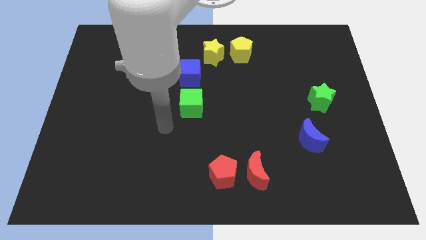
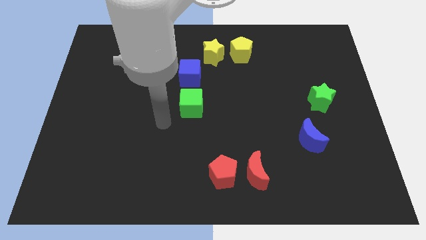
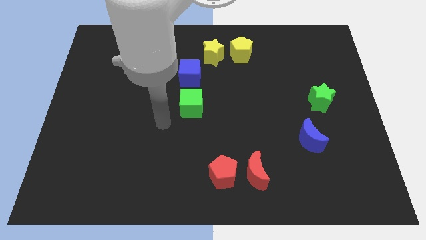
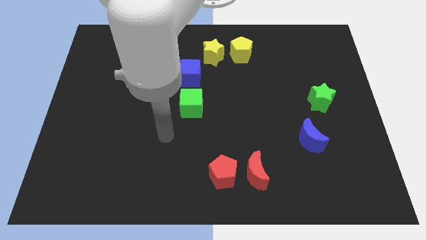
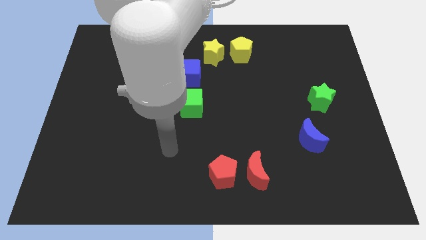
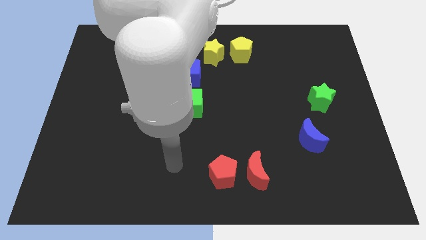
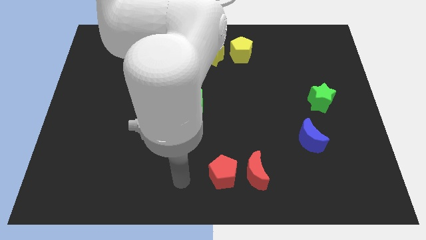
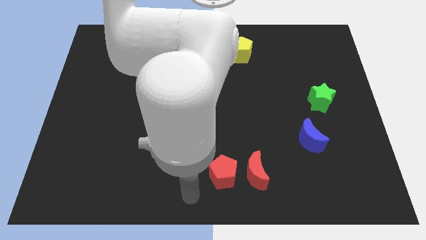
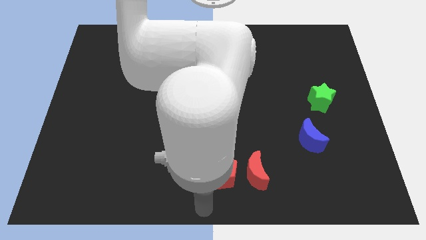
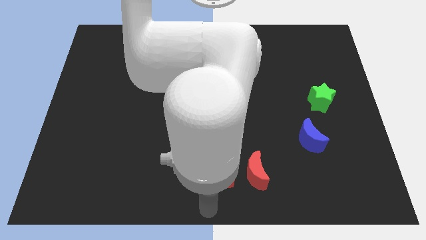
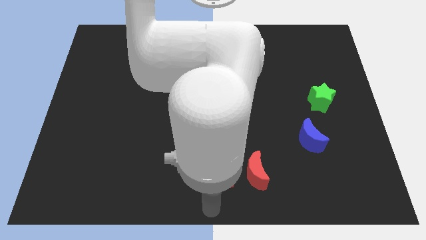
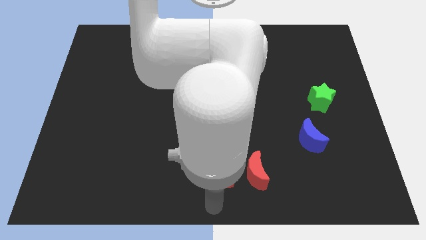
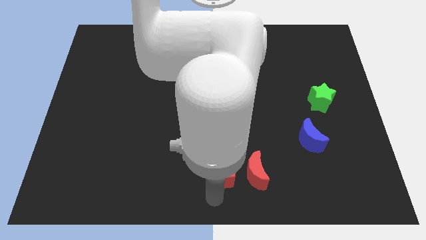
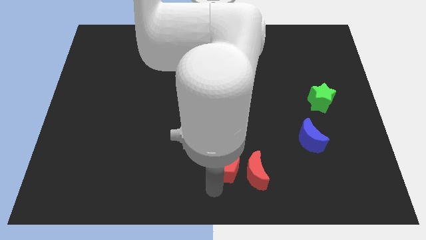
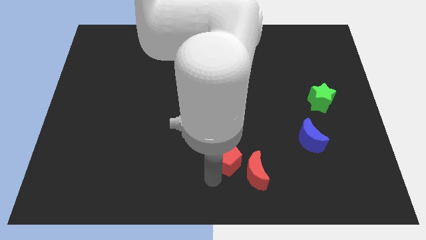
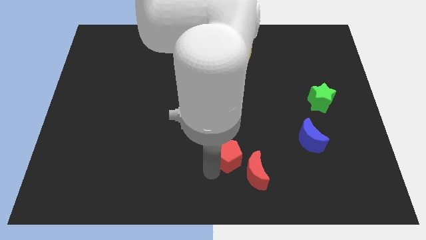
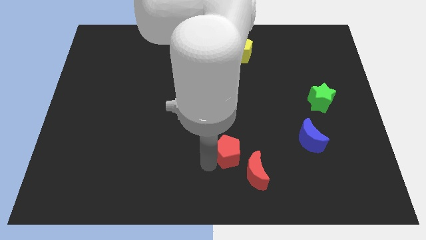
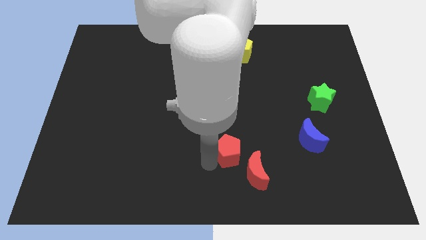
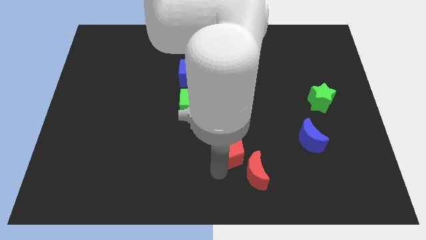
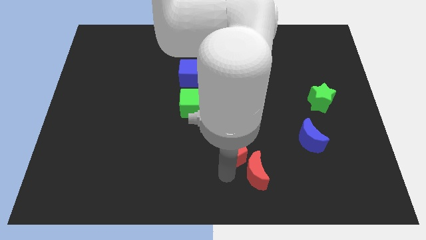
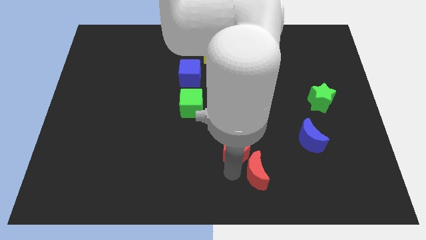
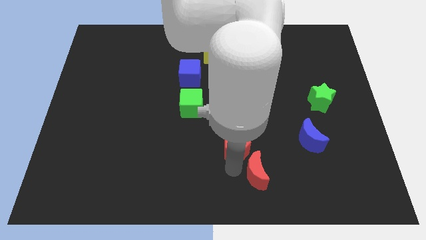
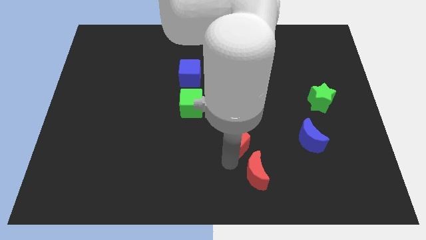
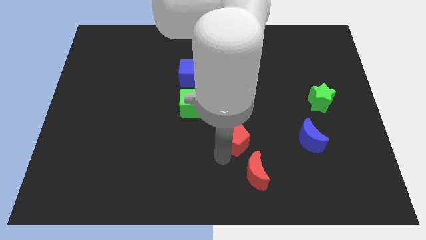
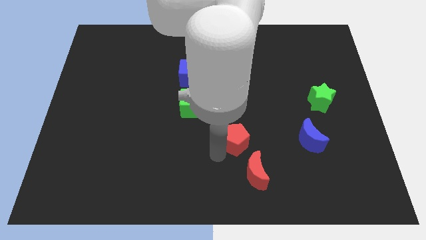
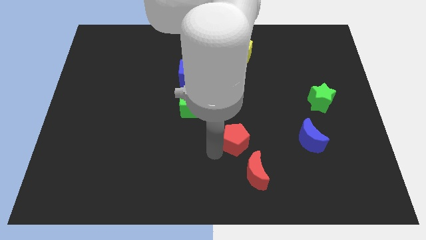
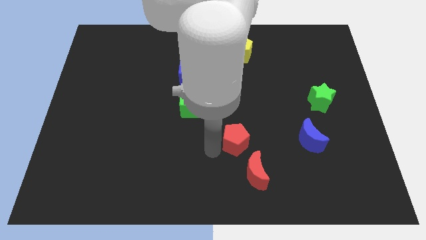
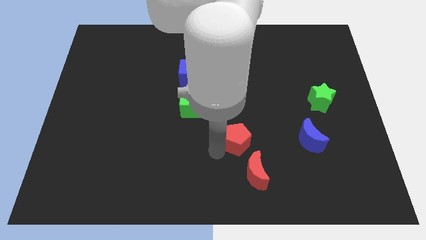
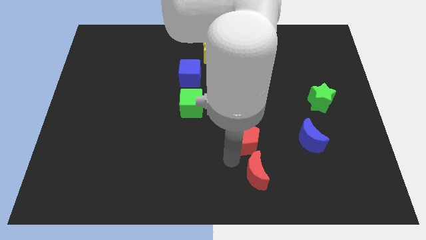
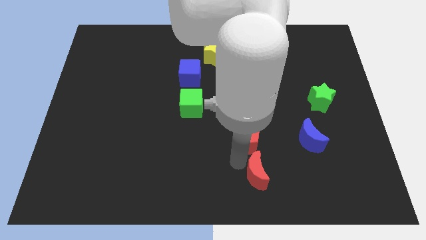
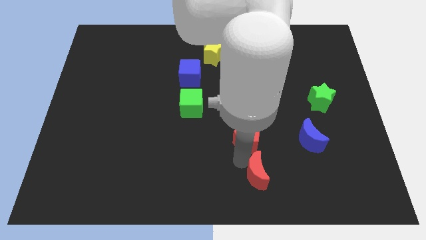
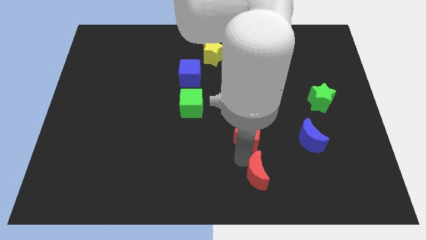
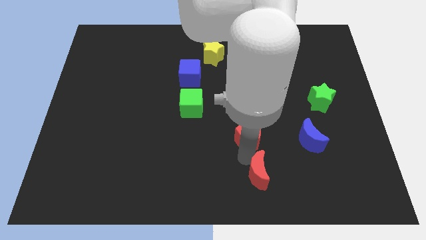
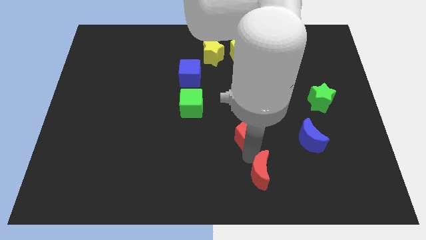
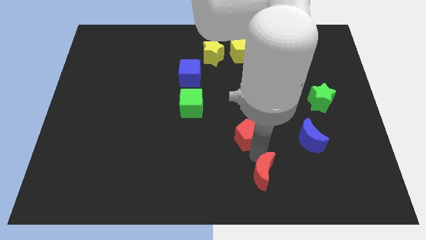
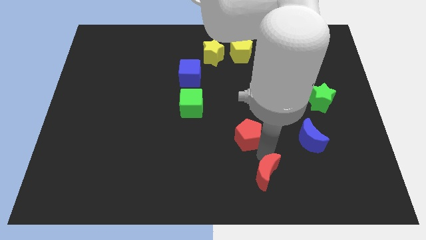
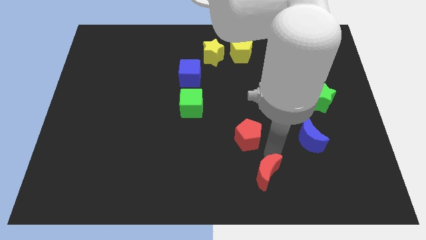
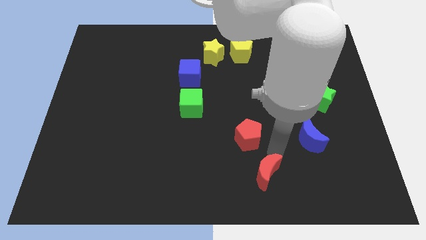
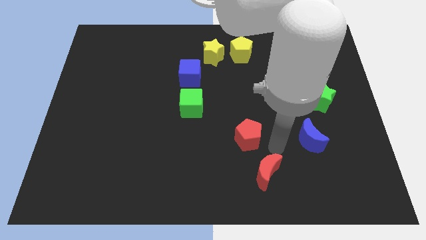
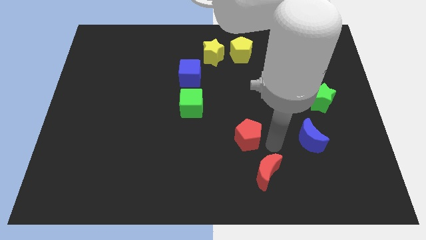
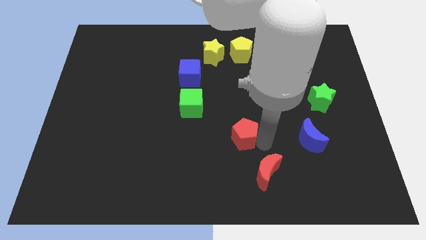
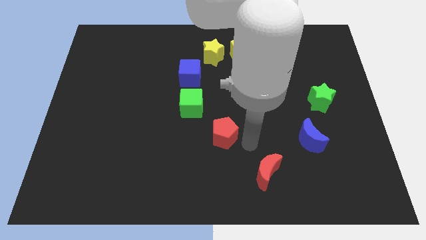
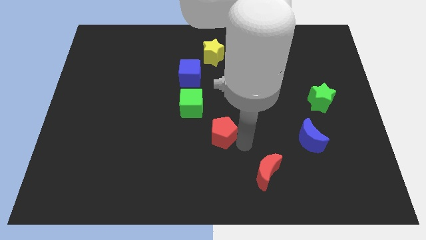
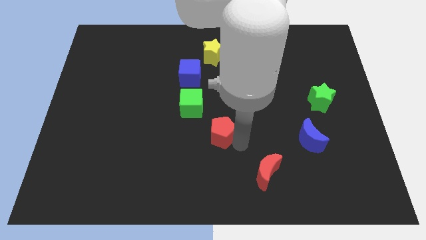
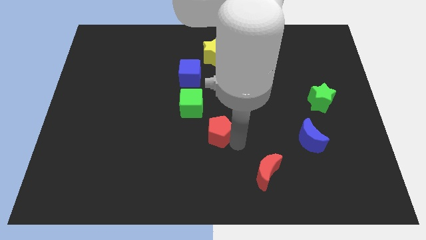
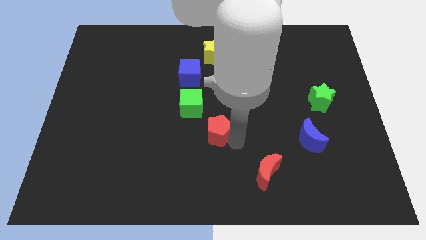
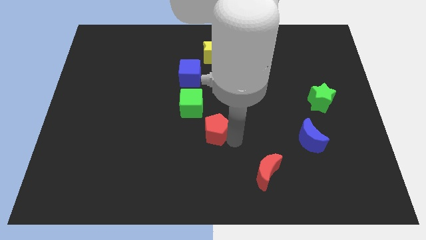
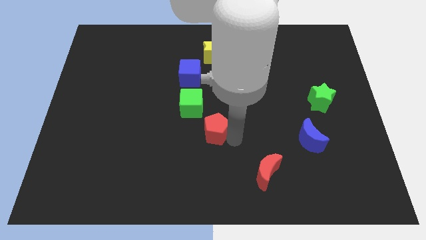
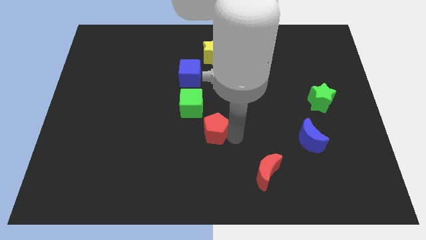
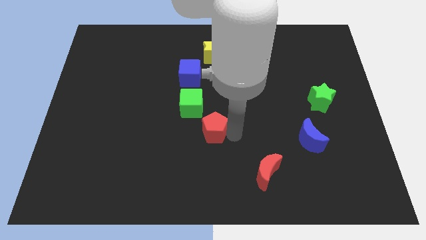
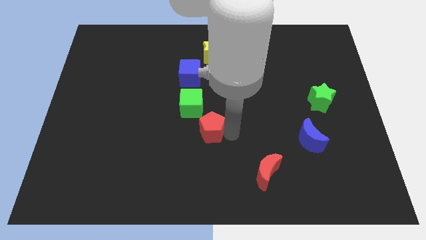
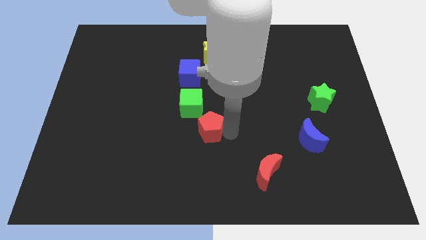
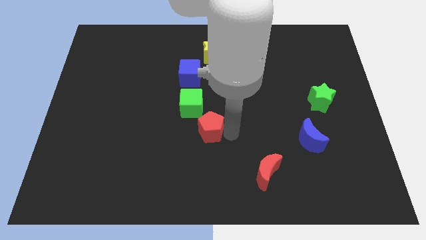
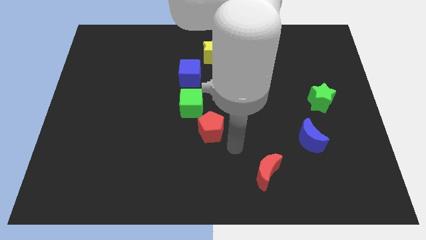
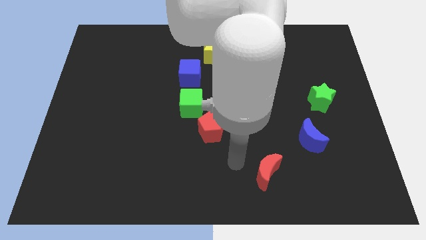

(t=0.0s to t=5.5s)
move the red pentagon below the green cube

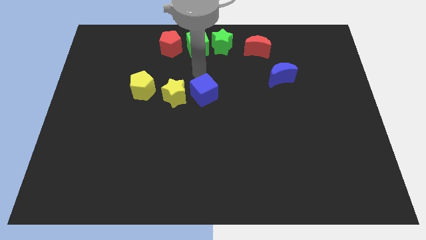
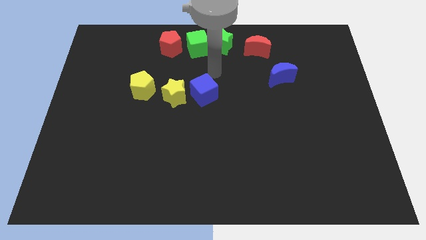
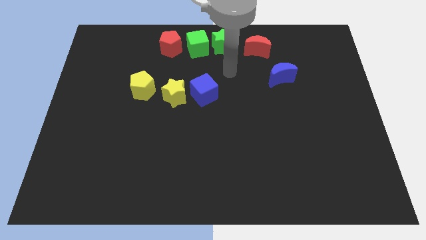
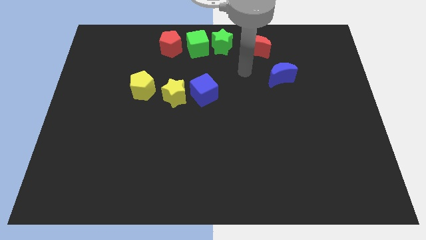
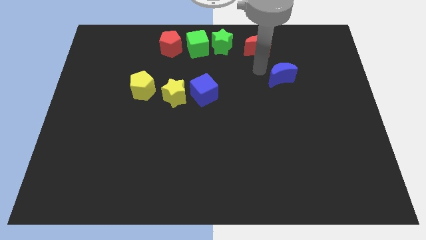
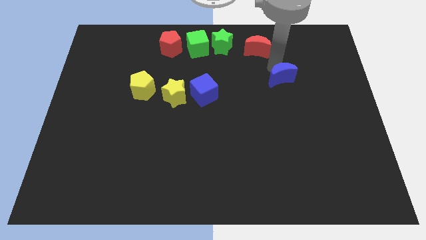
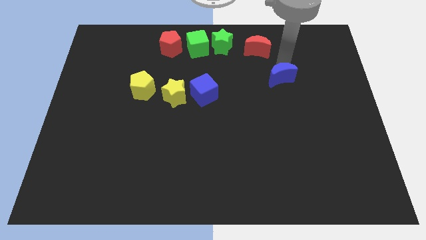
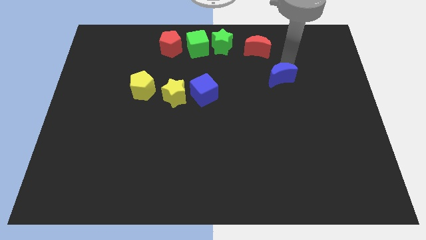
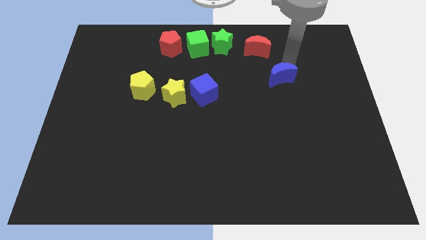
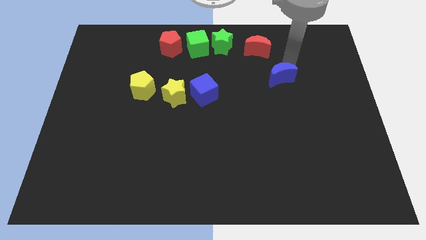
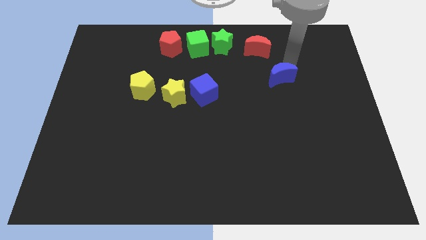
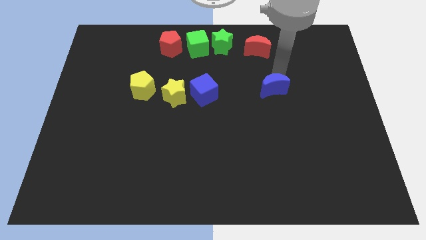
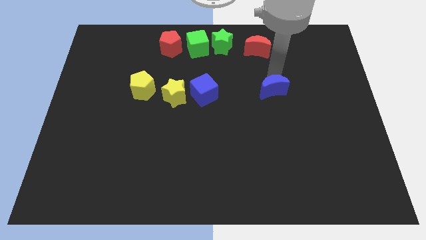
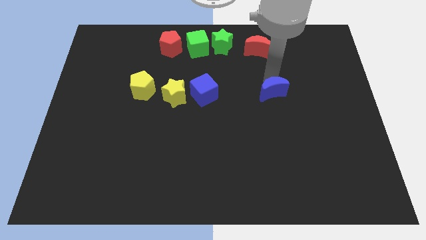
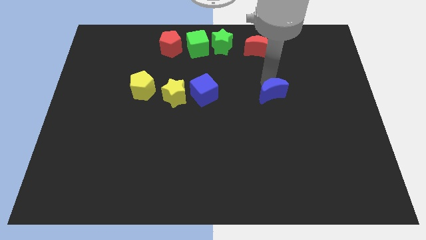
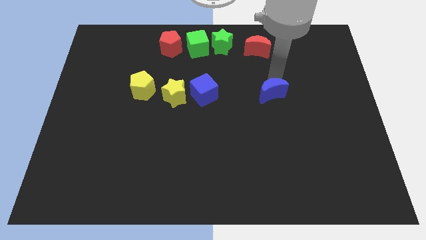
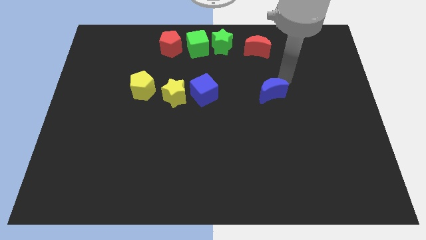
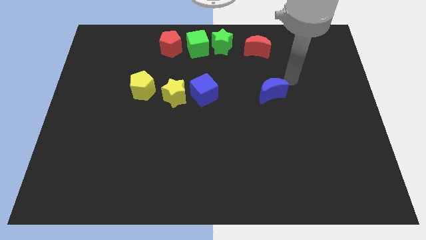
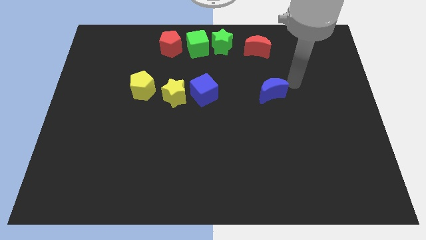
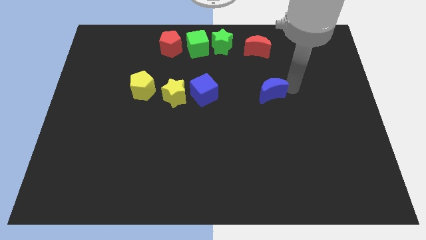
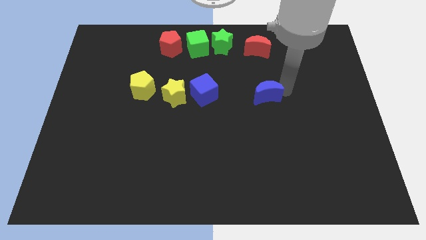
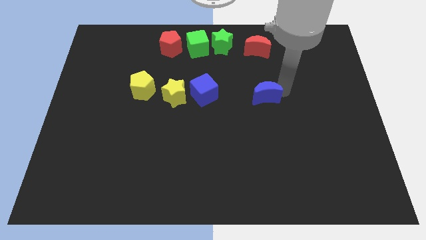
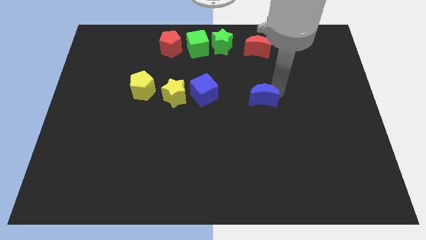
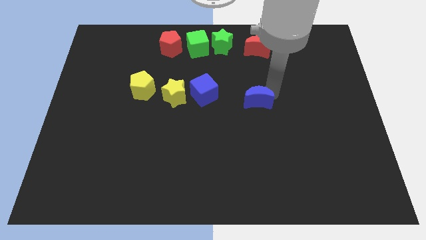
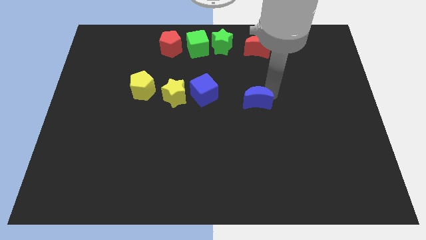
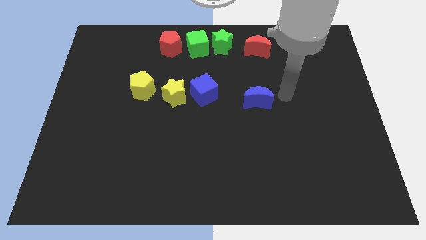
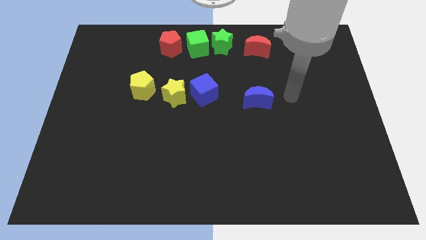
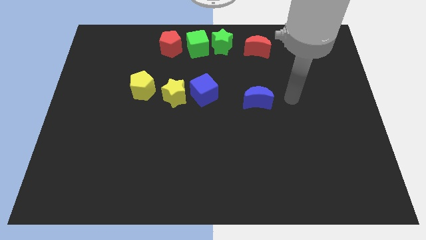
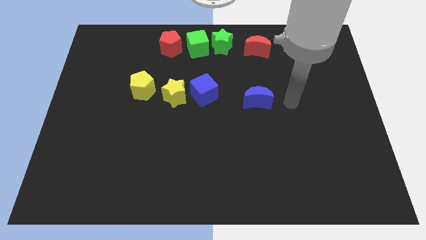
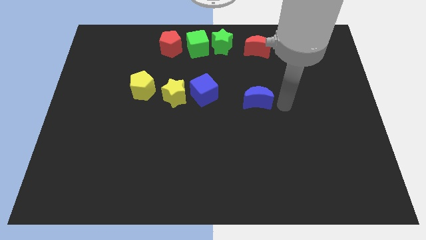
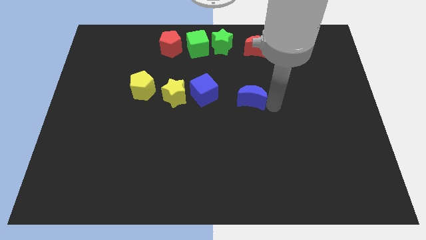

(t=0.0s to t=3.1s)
slide the blue moon vertically below the red moon

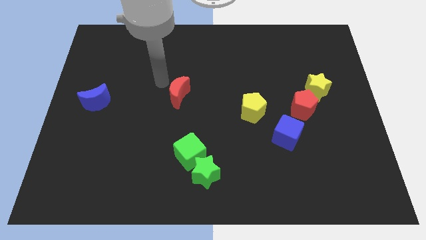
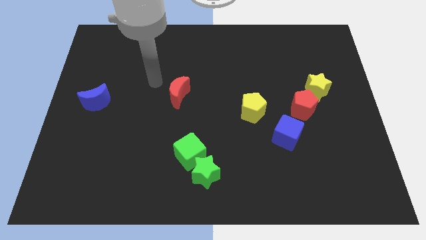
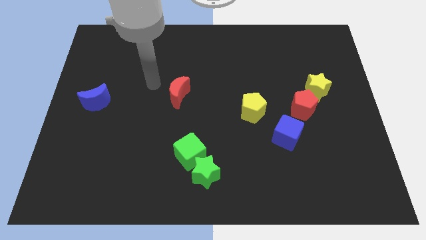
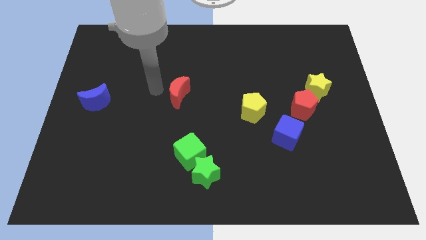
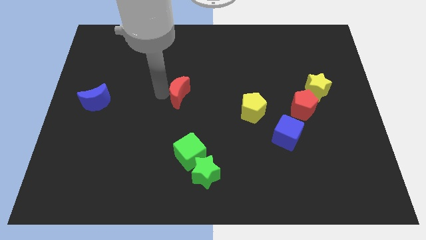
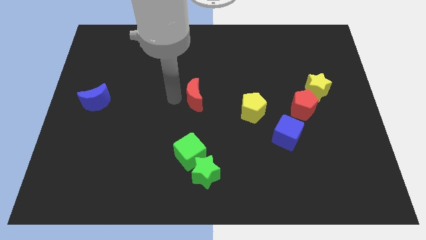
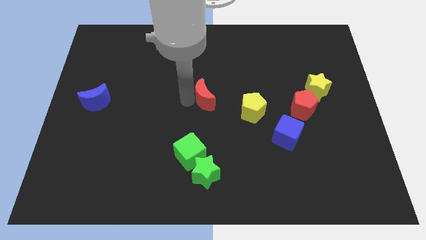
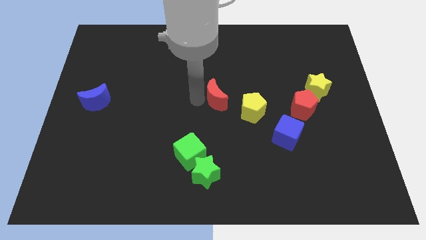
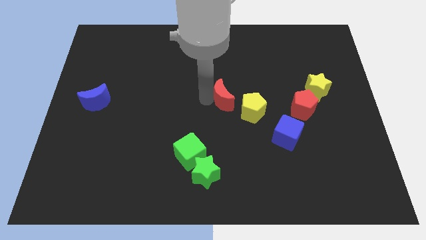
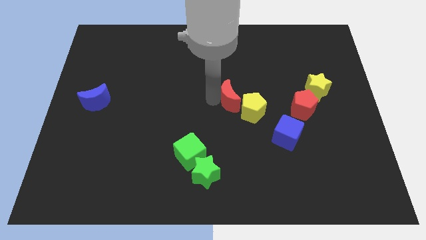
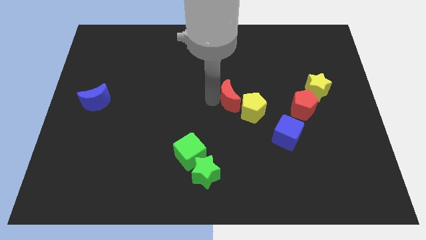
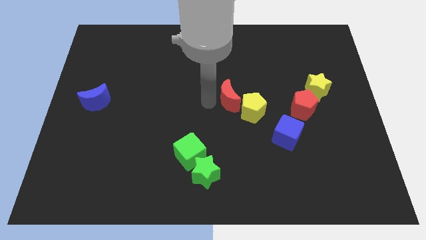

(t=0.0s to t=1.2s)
move red moon to the left of yellow pentagon
